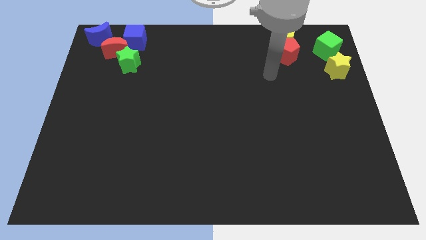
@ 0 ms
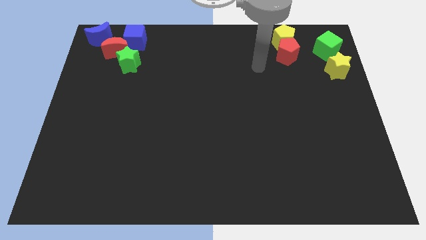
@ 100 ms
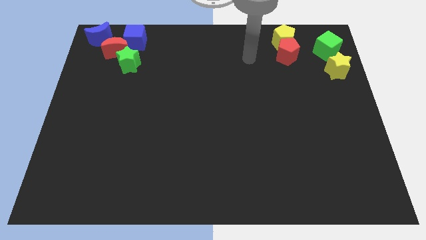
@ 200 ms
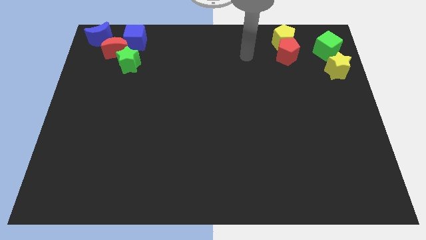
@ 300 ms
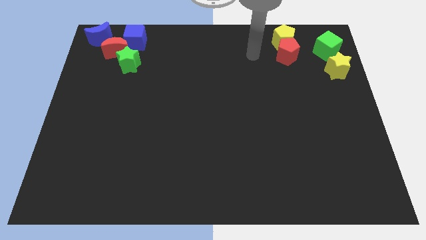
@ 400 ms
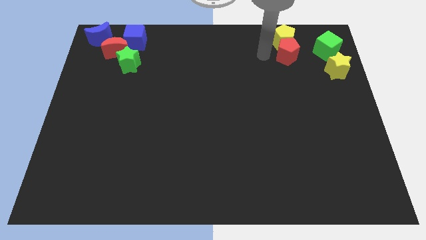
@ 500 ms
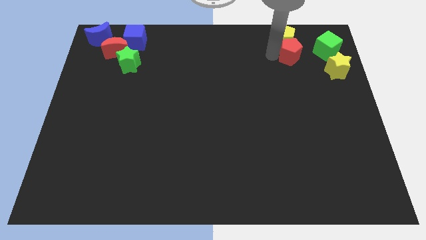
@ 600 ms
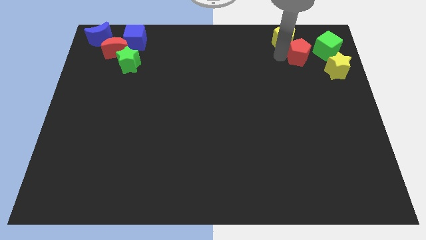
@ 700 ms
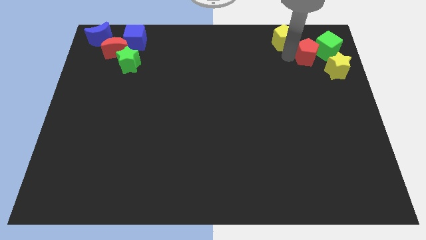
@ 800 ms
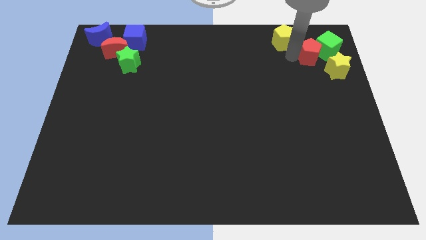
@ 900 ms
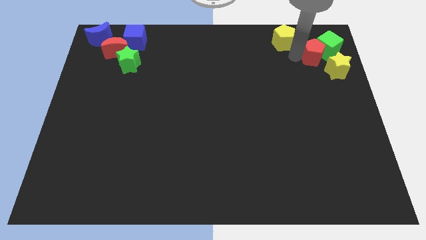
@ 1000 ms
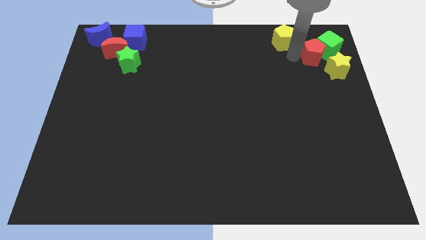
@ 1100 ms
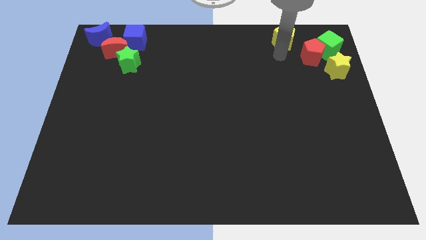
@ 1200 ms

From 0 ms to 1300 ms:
push the red pentagon into green cube

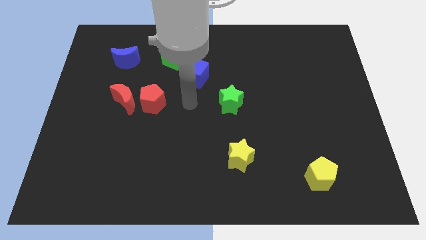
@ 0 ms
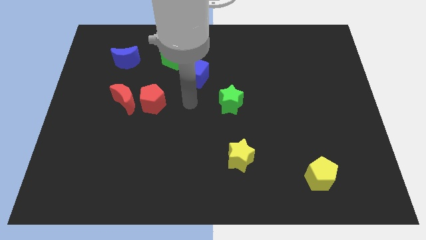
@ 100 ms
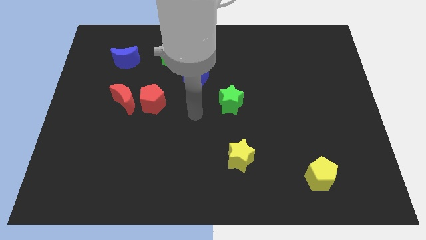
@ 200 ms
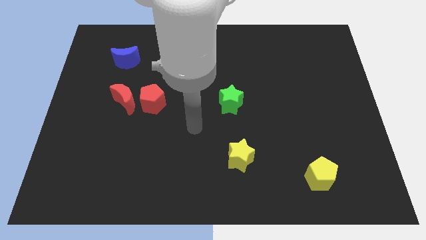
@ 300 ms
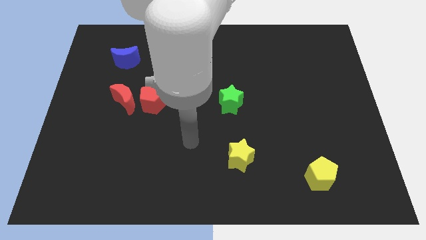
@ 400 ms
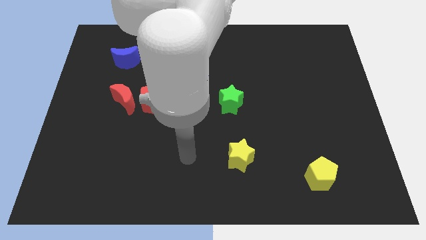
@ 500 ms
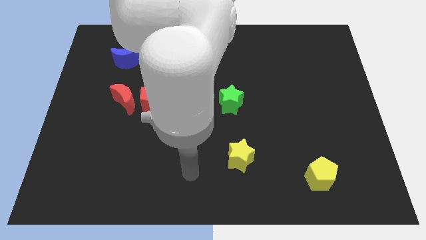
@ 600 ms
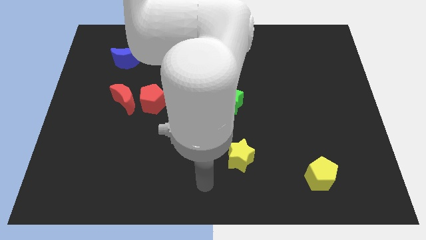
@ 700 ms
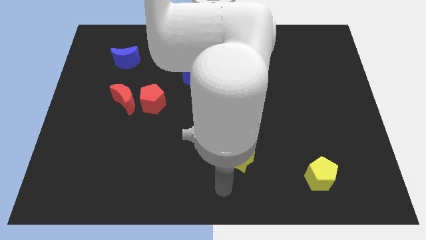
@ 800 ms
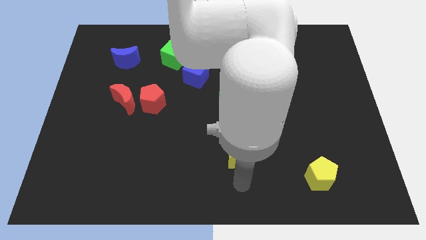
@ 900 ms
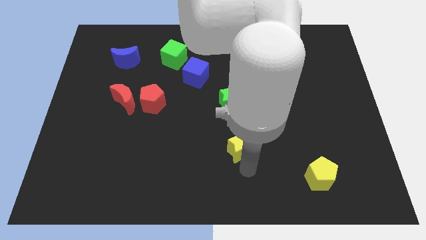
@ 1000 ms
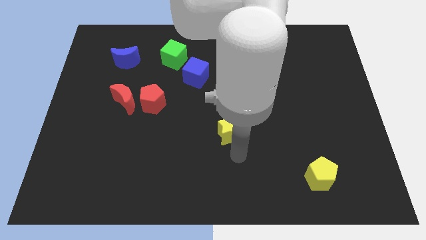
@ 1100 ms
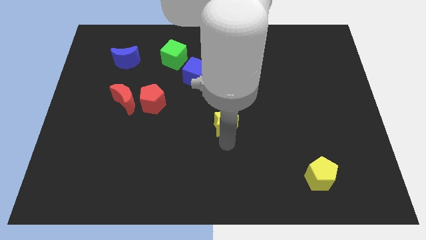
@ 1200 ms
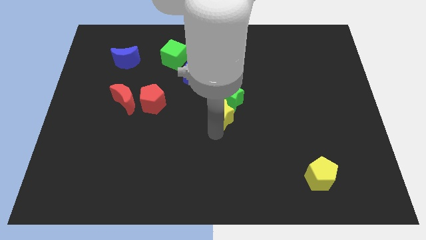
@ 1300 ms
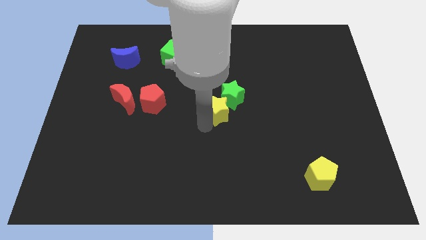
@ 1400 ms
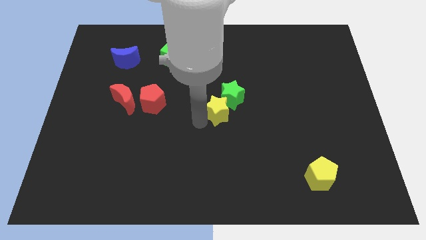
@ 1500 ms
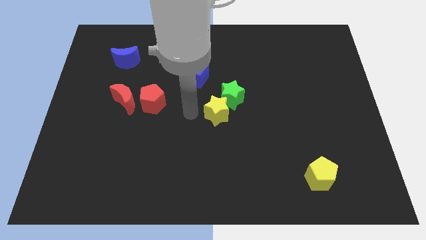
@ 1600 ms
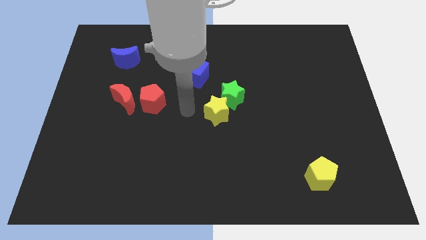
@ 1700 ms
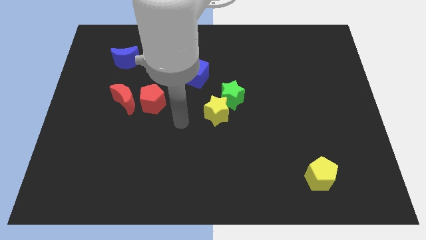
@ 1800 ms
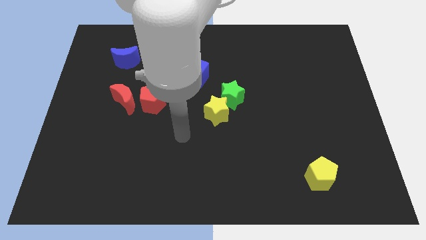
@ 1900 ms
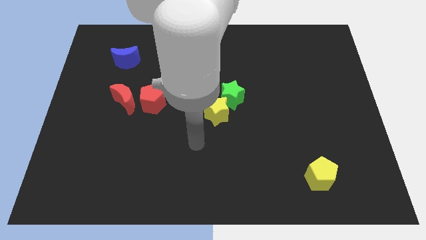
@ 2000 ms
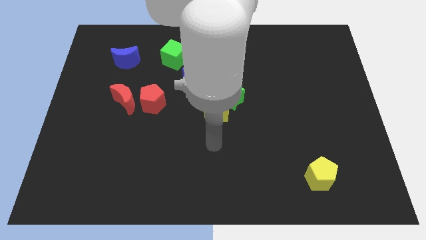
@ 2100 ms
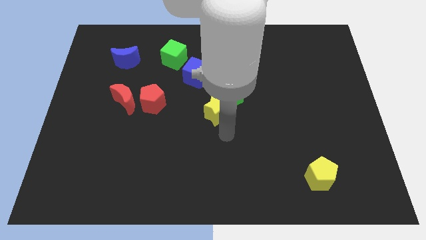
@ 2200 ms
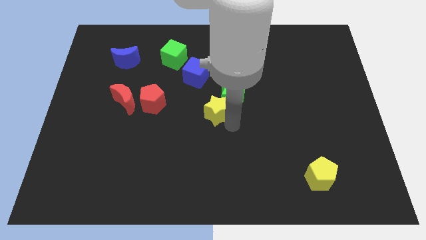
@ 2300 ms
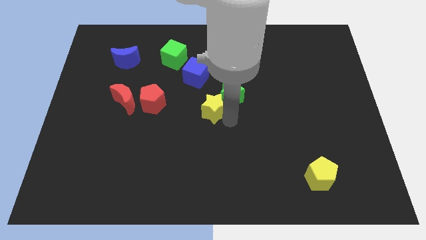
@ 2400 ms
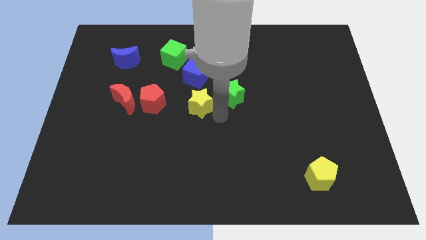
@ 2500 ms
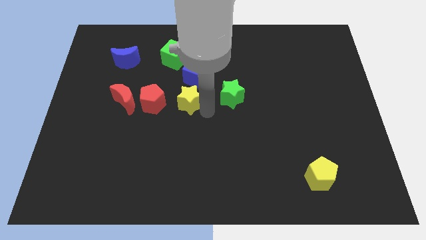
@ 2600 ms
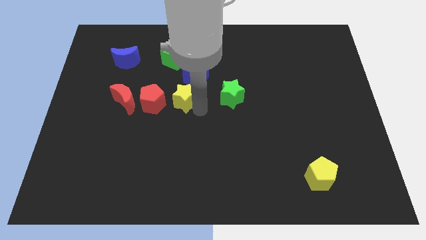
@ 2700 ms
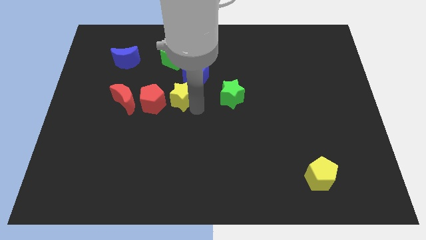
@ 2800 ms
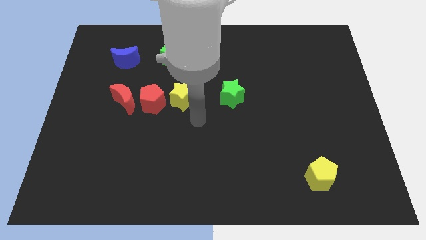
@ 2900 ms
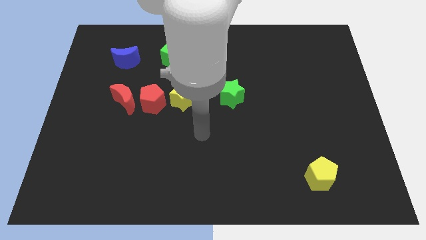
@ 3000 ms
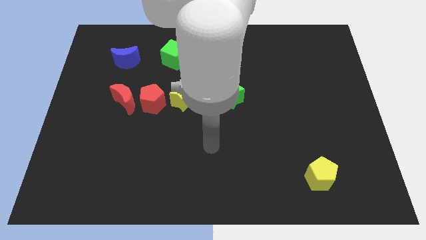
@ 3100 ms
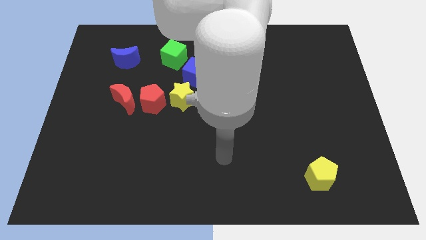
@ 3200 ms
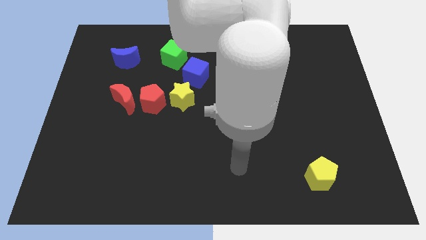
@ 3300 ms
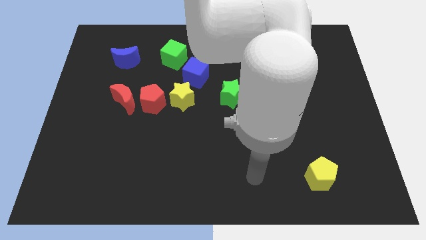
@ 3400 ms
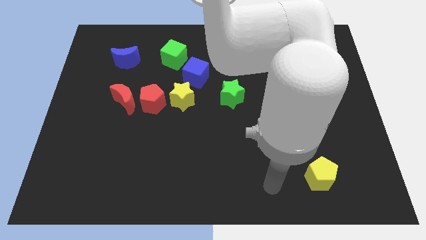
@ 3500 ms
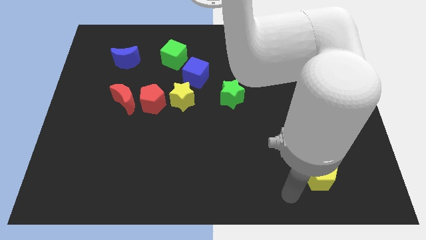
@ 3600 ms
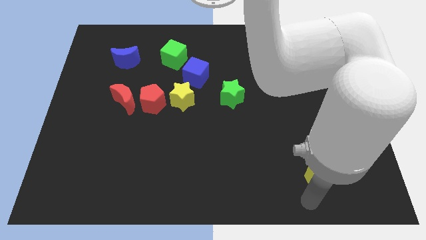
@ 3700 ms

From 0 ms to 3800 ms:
move the yellow star to the right of the red pentabon

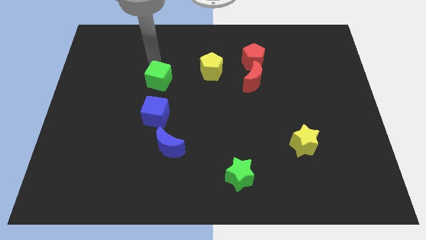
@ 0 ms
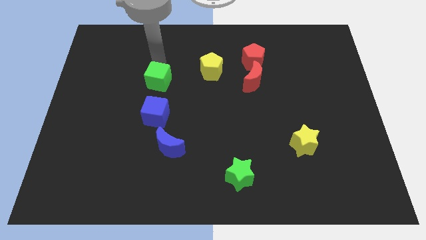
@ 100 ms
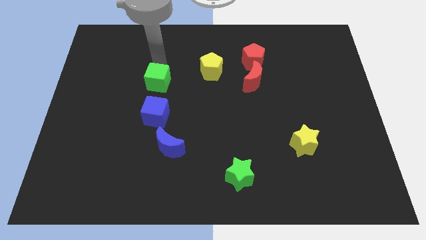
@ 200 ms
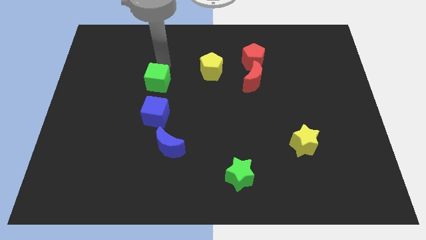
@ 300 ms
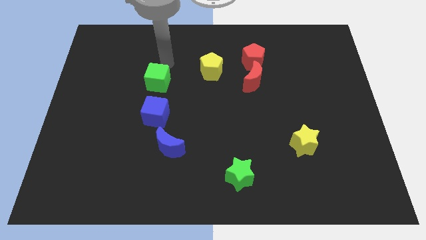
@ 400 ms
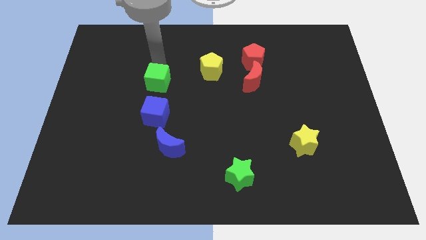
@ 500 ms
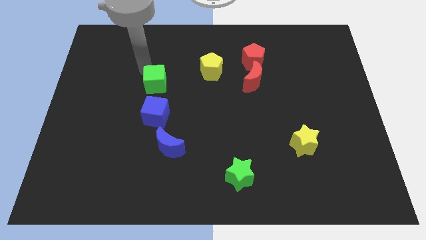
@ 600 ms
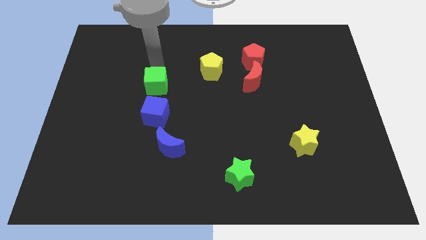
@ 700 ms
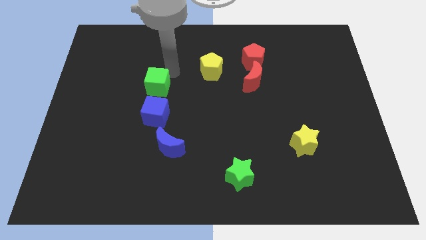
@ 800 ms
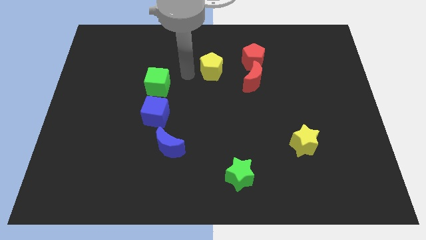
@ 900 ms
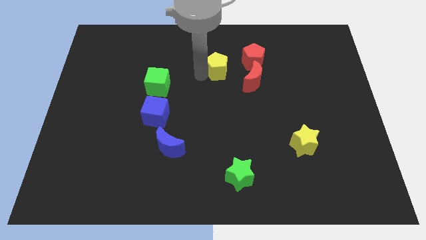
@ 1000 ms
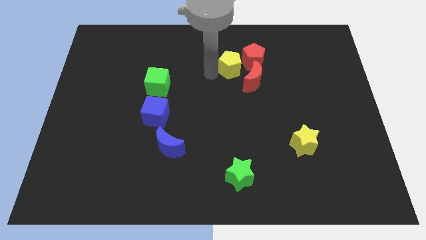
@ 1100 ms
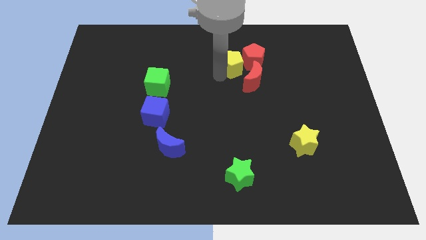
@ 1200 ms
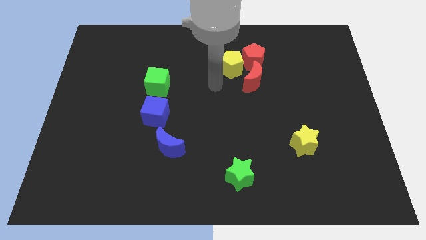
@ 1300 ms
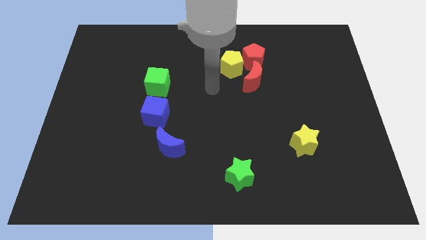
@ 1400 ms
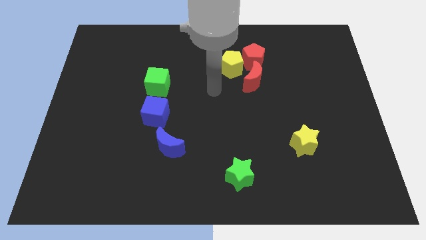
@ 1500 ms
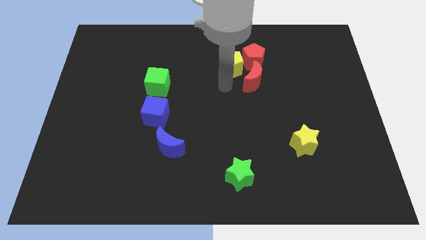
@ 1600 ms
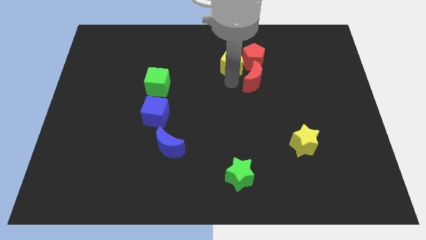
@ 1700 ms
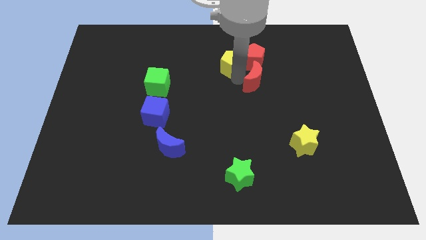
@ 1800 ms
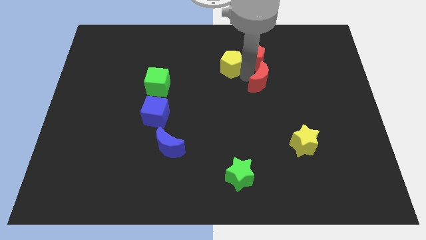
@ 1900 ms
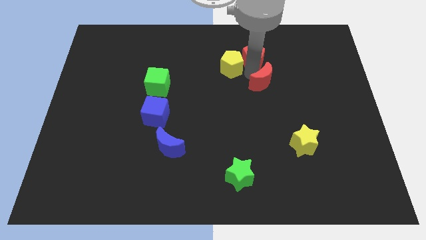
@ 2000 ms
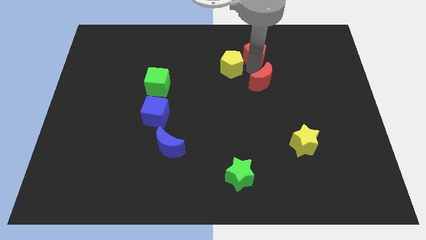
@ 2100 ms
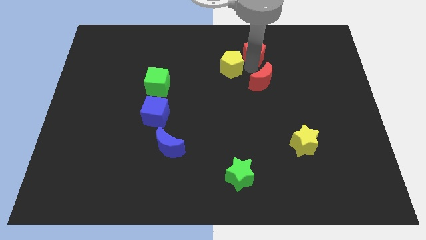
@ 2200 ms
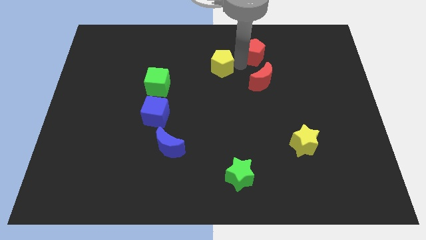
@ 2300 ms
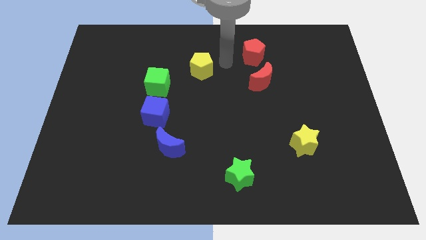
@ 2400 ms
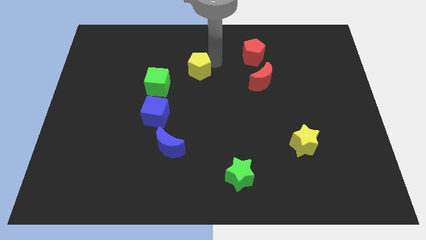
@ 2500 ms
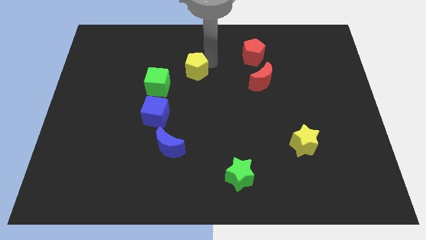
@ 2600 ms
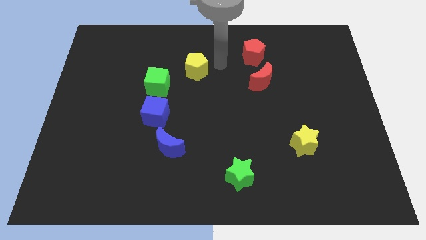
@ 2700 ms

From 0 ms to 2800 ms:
separate red moon from red pentagon

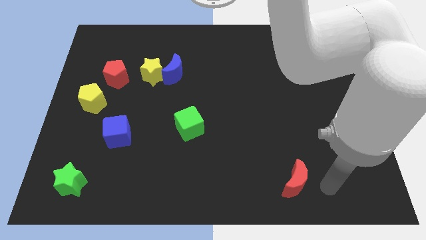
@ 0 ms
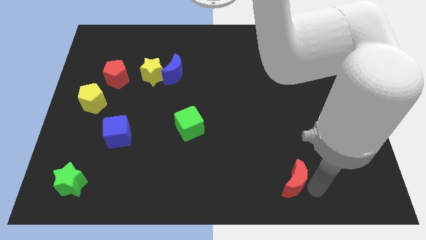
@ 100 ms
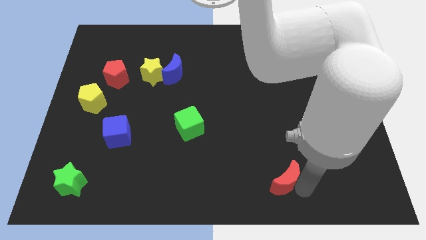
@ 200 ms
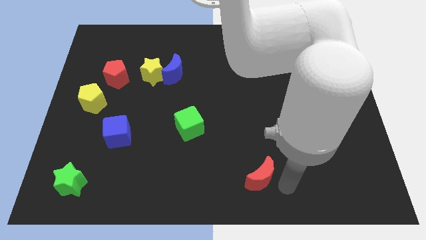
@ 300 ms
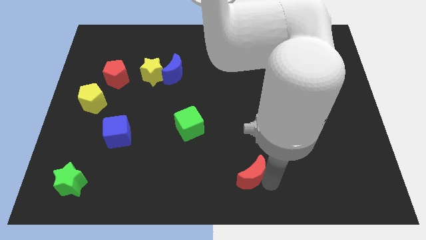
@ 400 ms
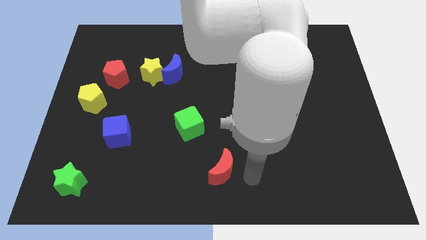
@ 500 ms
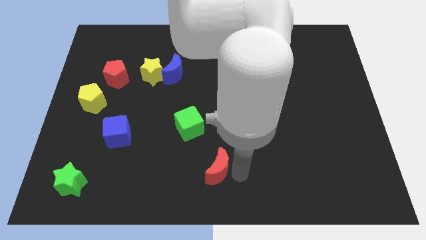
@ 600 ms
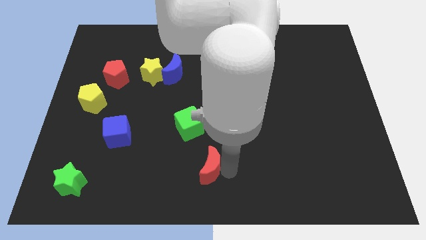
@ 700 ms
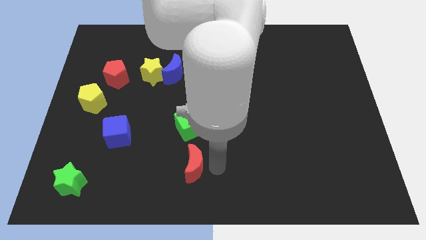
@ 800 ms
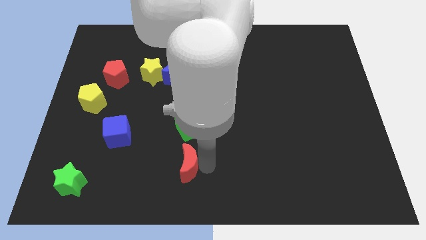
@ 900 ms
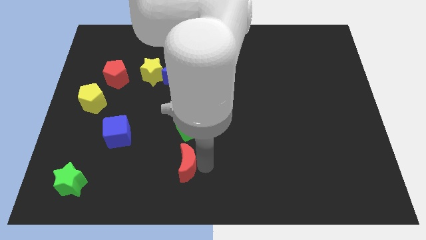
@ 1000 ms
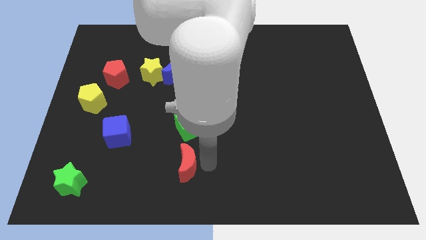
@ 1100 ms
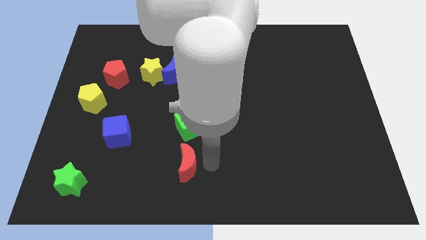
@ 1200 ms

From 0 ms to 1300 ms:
put the red crescent underneath the green cube
